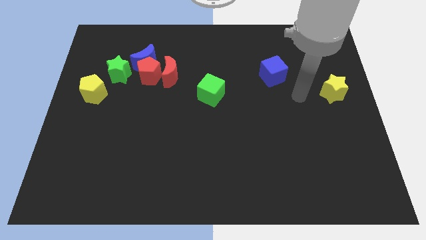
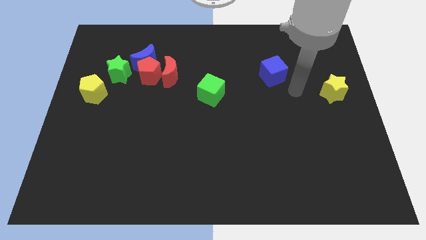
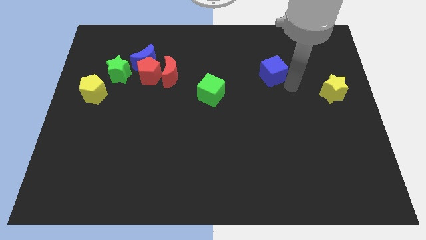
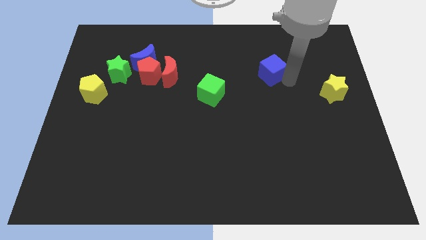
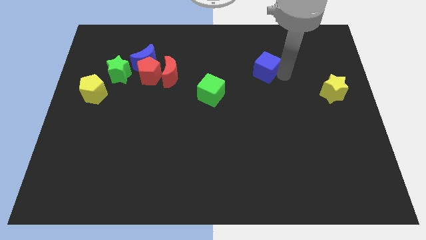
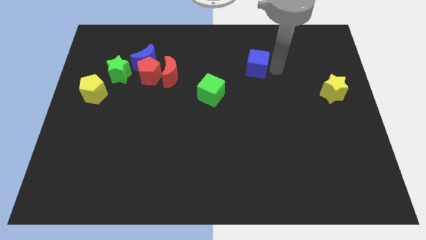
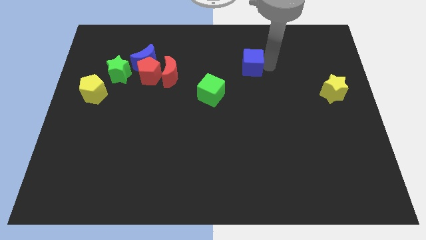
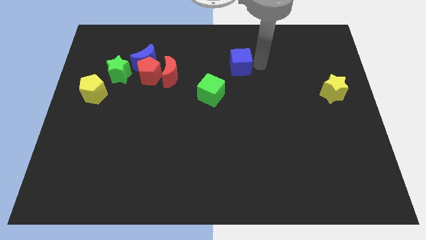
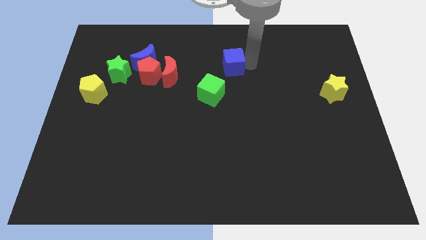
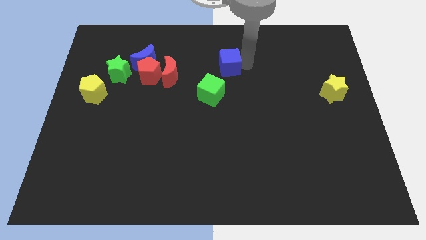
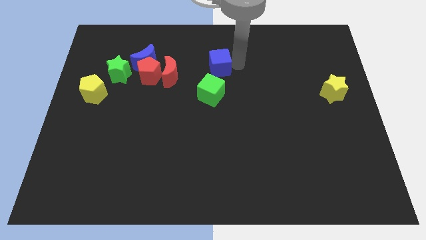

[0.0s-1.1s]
move blue cube diagonally to the green cube

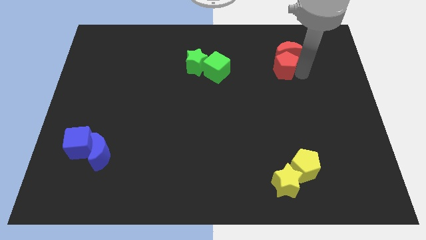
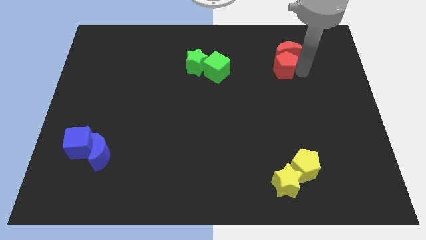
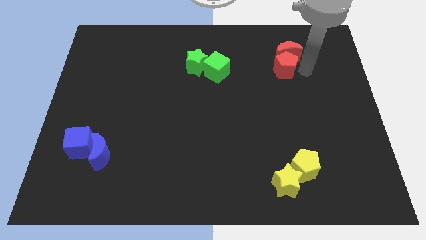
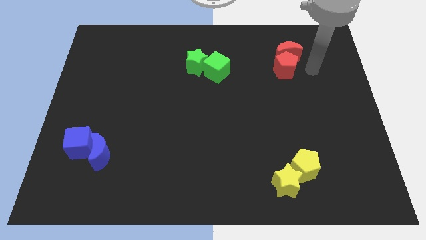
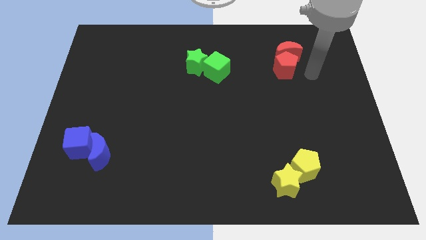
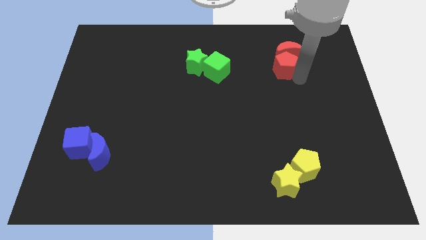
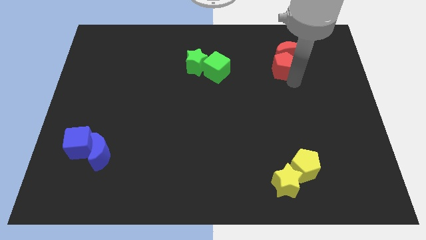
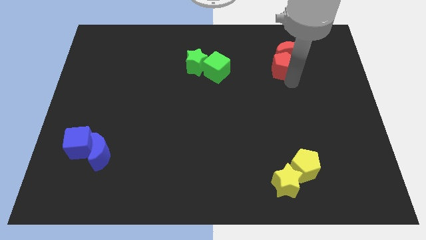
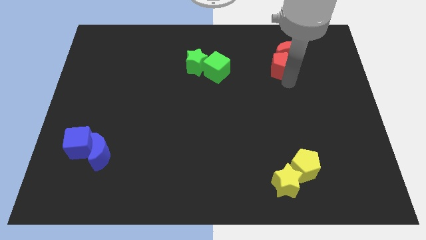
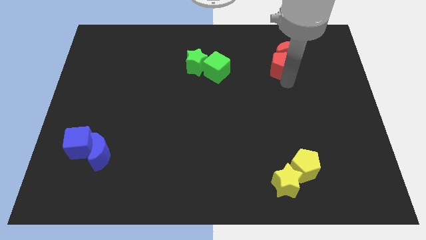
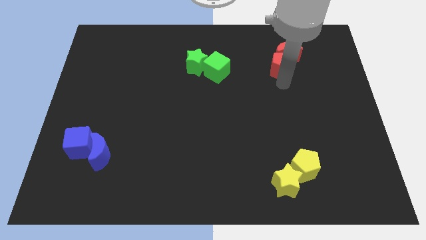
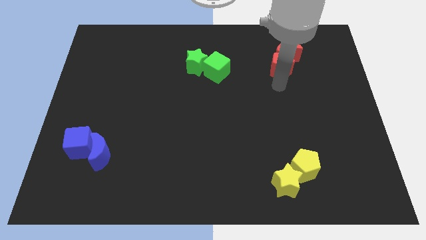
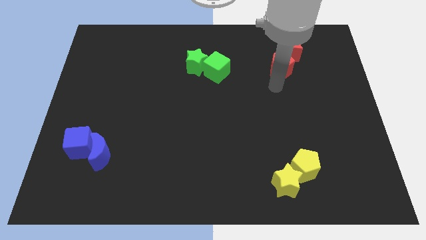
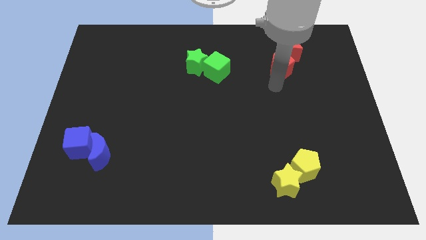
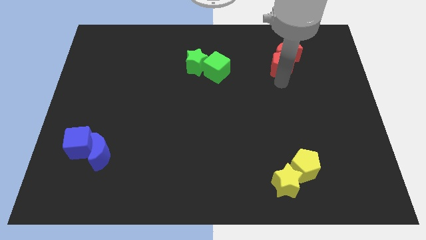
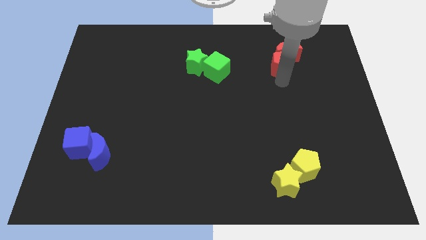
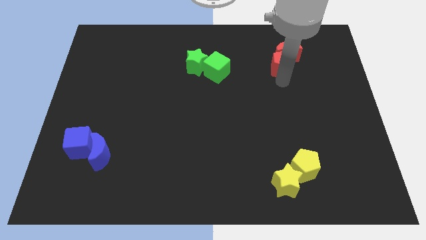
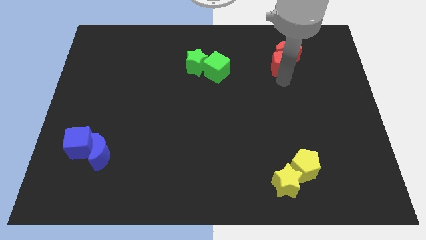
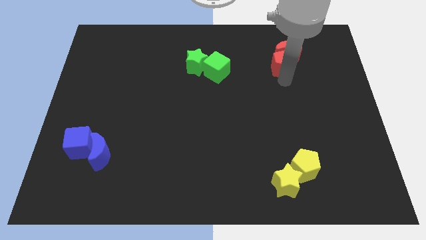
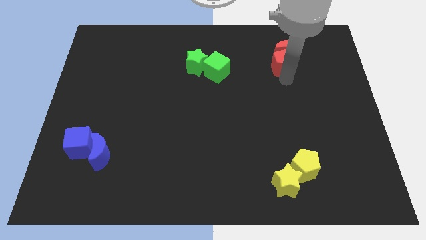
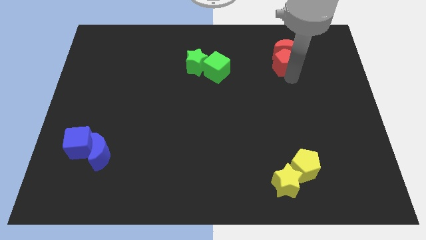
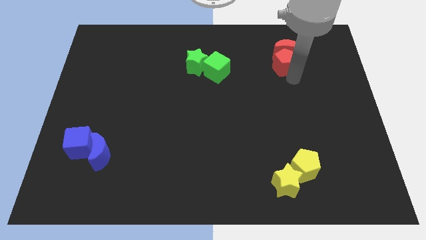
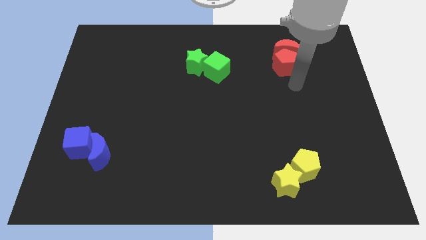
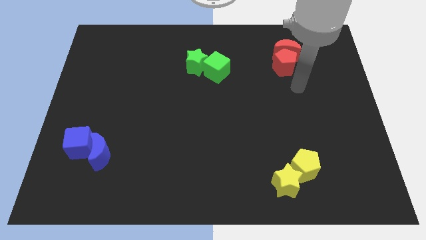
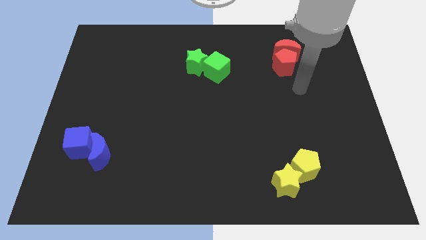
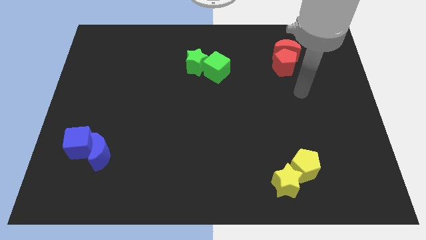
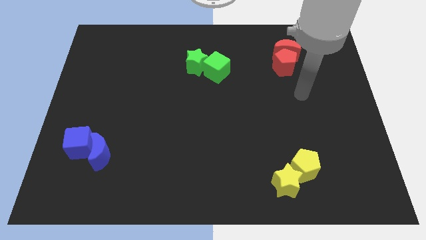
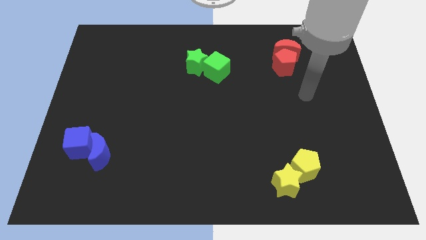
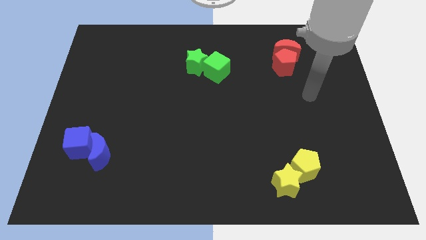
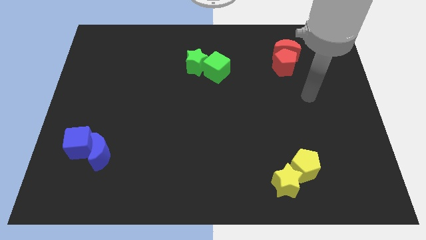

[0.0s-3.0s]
slightly move the red pentagon and crescent upwards

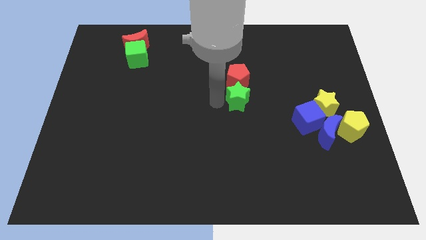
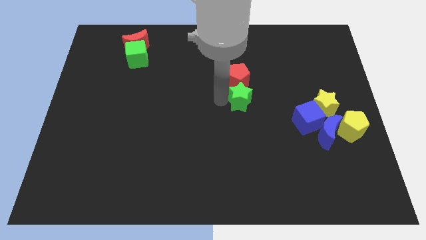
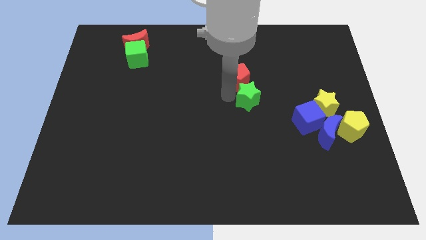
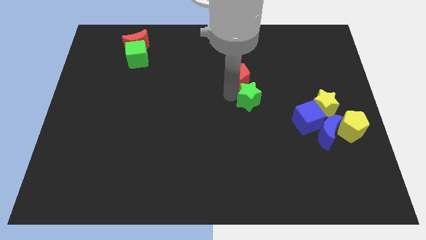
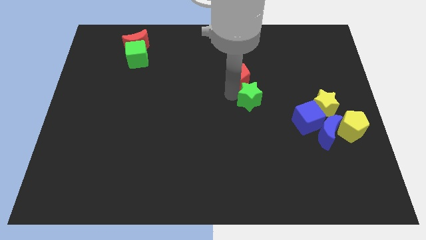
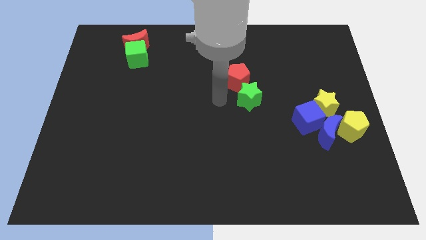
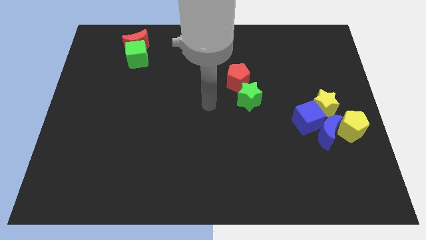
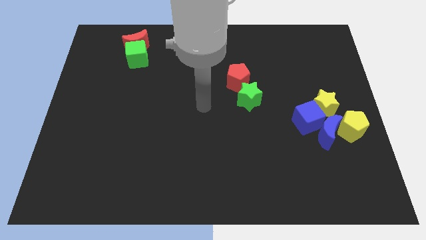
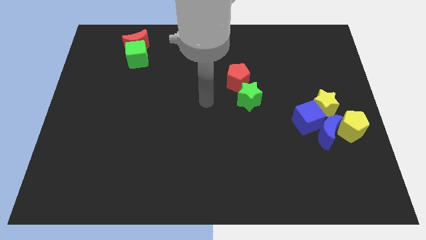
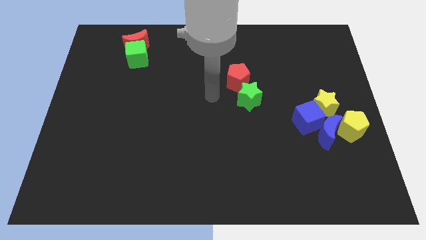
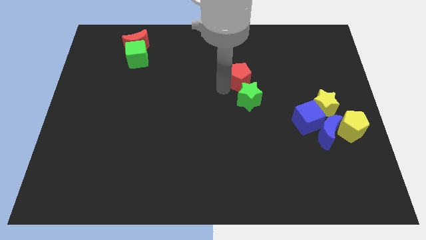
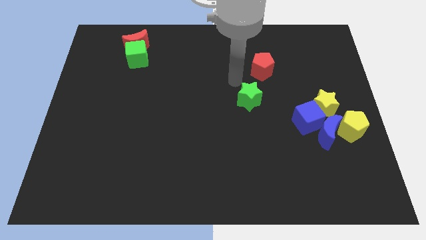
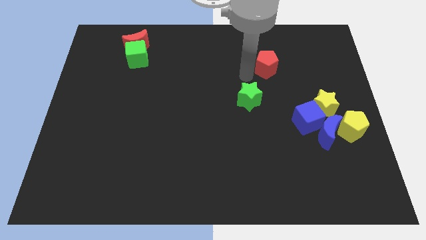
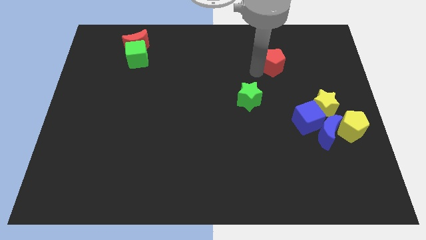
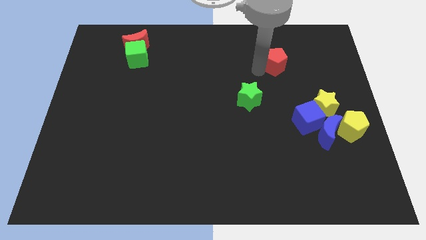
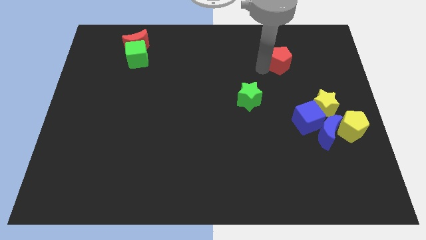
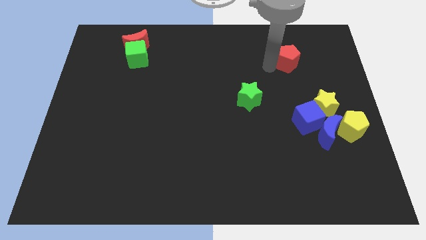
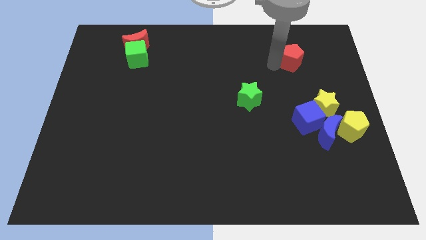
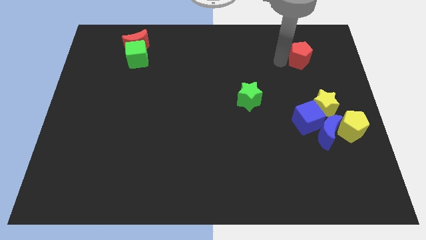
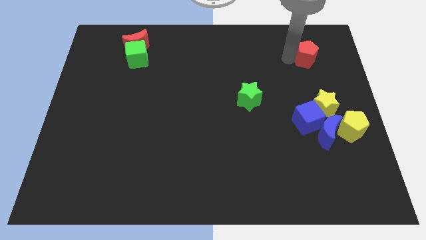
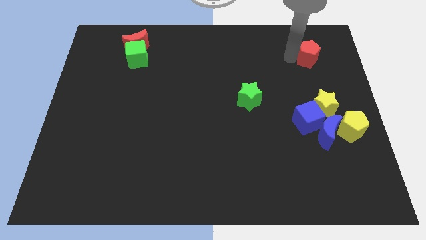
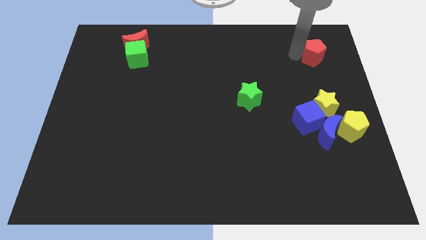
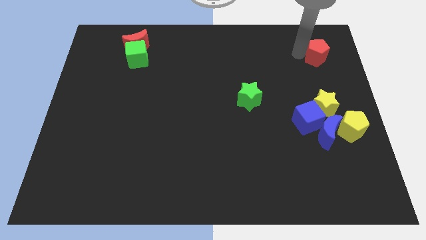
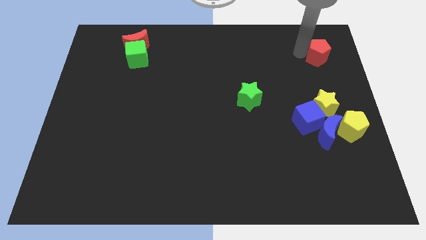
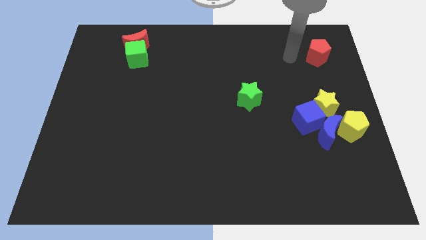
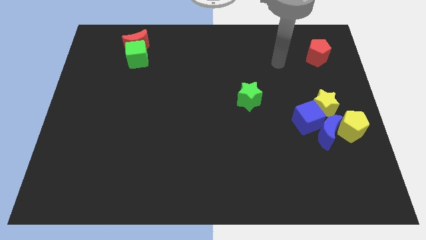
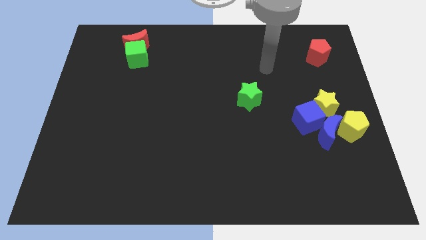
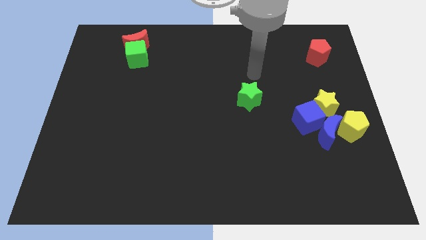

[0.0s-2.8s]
move the red pentagon vertically above the yellow star

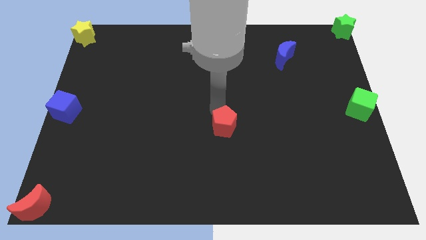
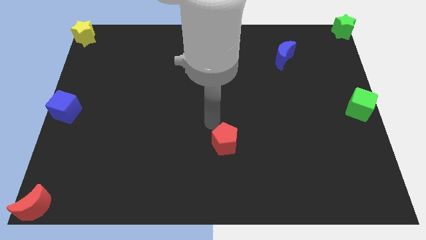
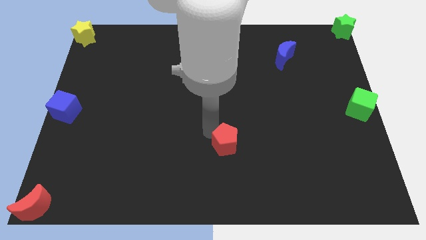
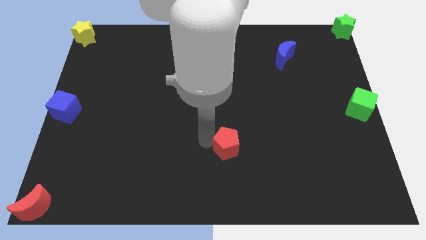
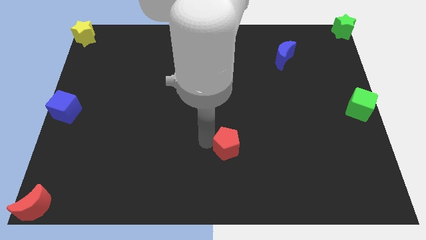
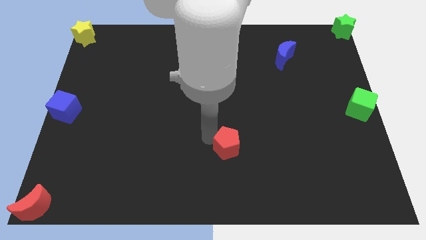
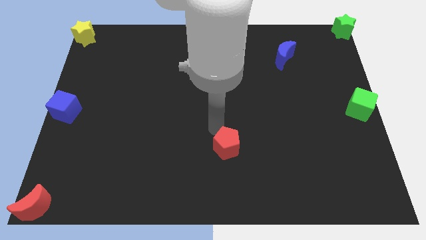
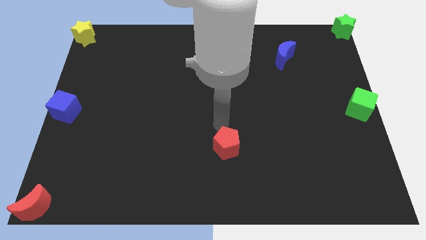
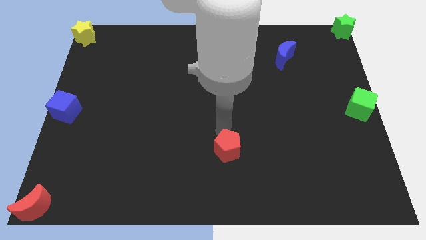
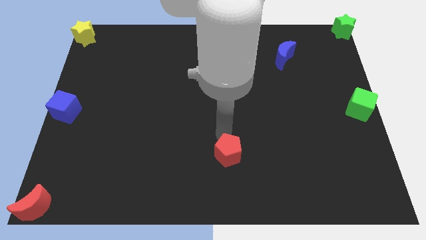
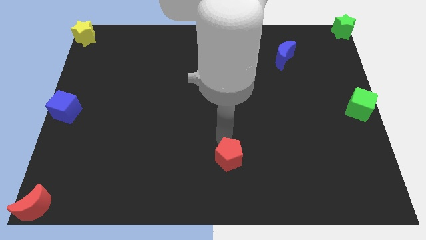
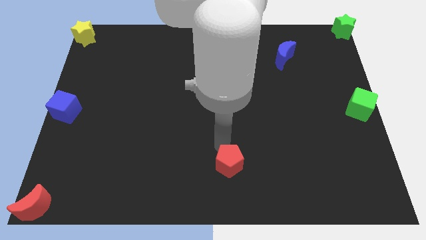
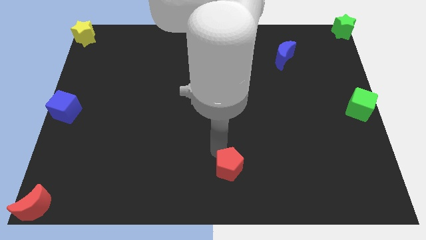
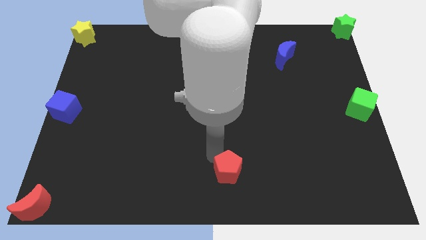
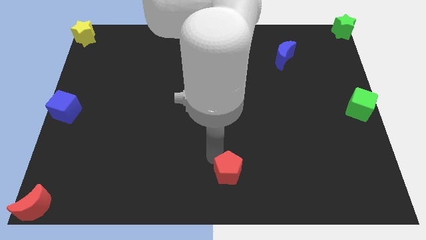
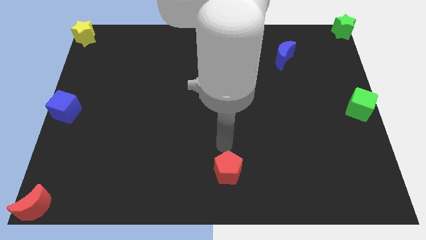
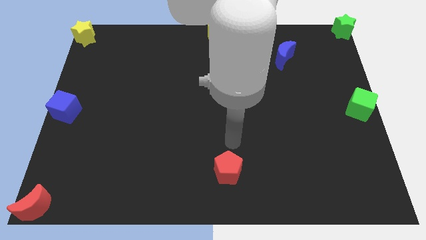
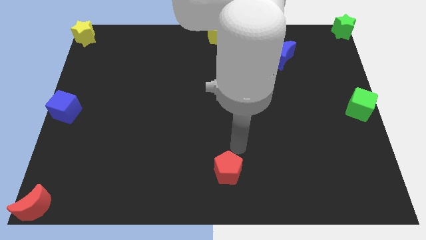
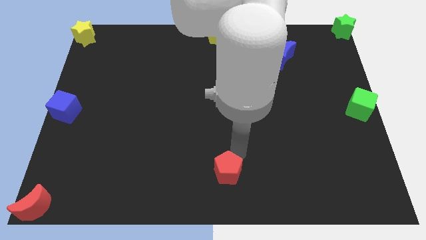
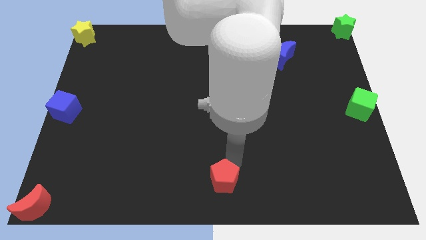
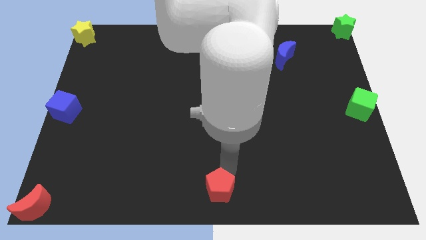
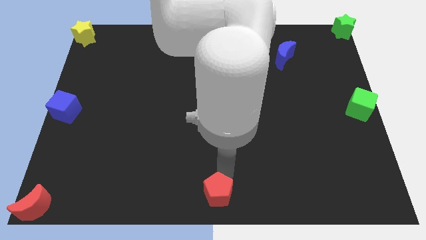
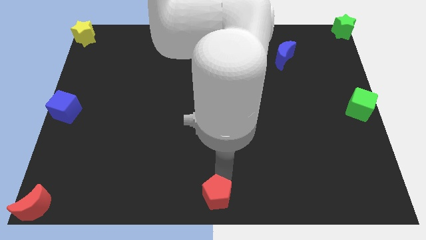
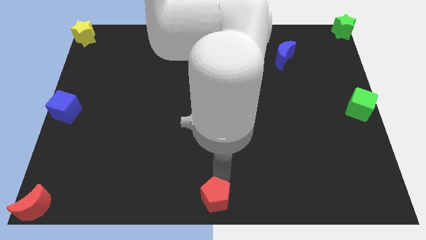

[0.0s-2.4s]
move the red pentagon to the bottom center of the board
